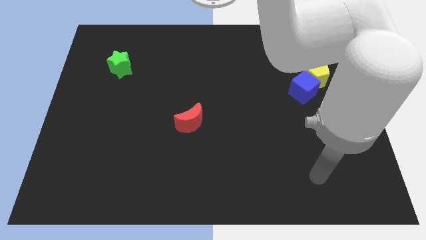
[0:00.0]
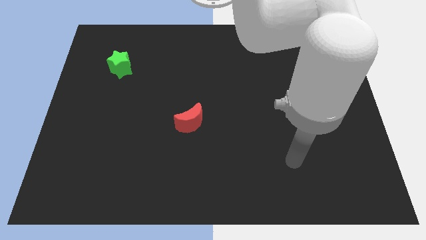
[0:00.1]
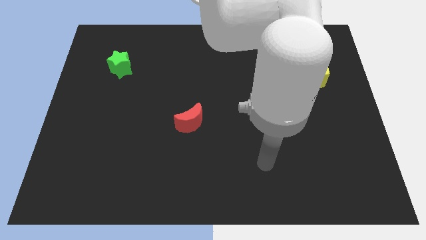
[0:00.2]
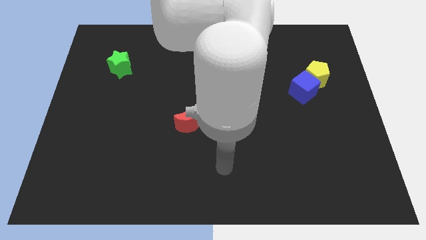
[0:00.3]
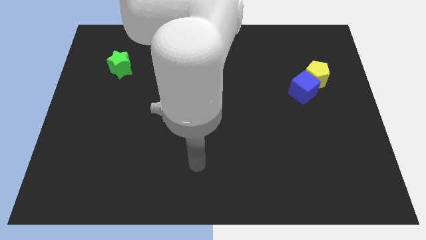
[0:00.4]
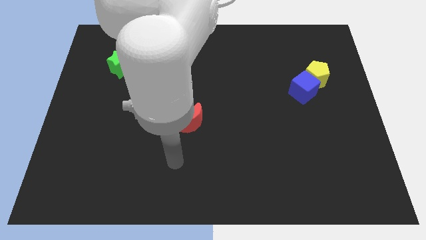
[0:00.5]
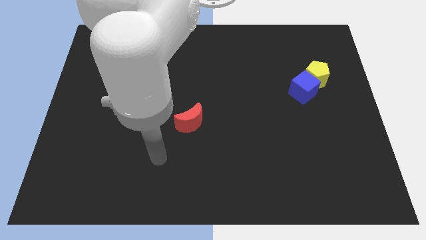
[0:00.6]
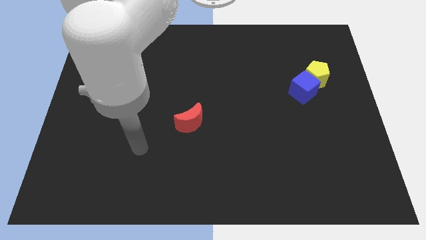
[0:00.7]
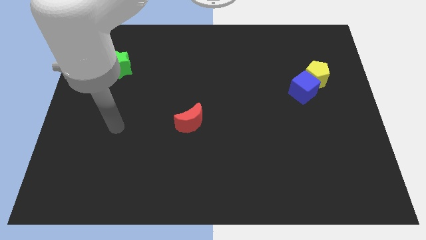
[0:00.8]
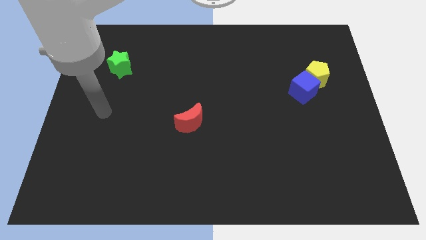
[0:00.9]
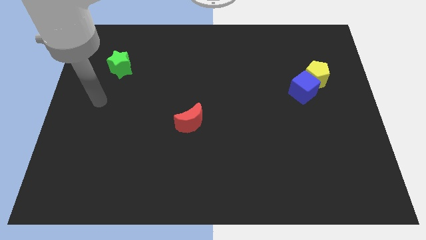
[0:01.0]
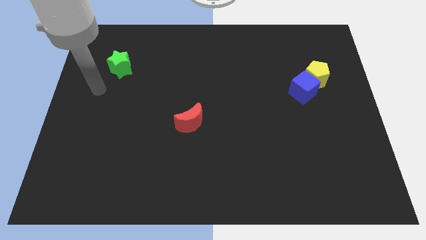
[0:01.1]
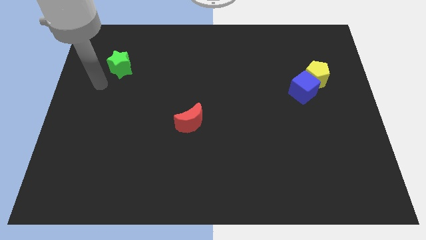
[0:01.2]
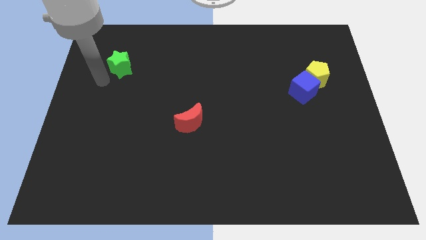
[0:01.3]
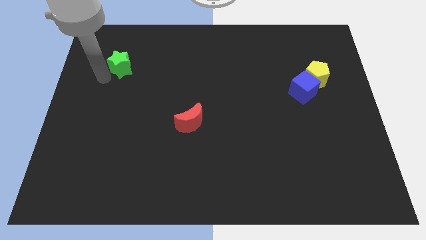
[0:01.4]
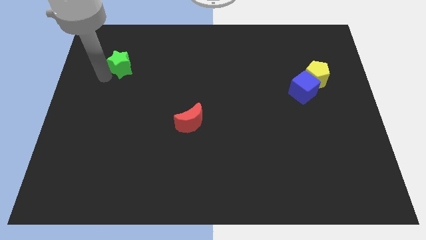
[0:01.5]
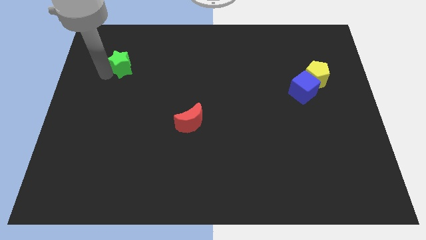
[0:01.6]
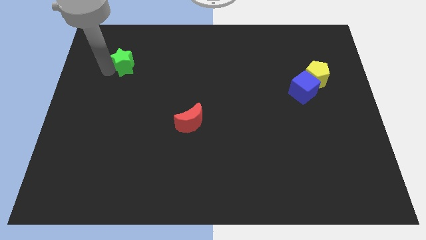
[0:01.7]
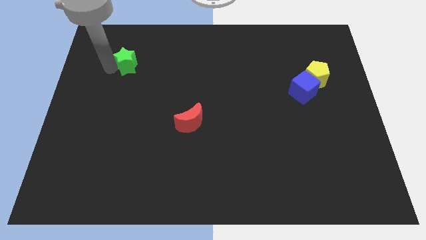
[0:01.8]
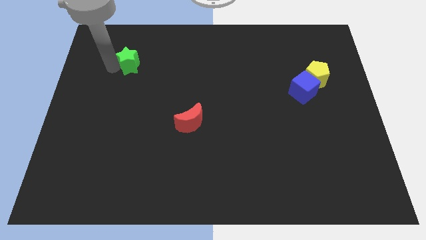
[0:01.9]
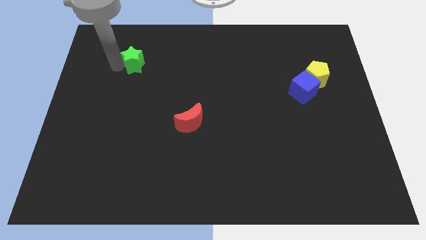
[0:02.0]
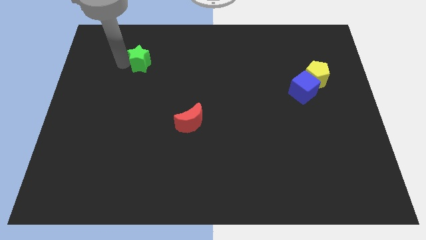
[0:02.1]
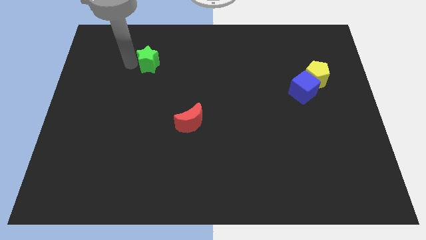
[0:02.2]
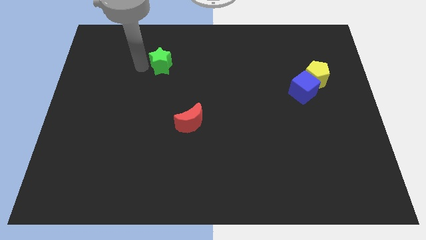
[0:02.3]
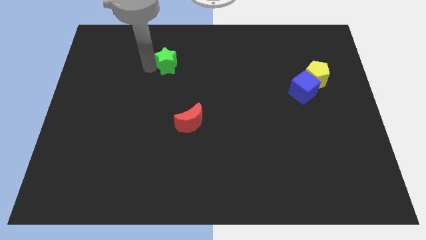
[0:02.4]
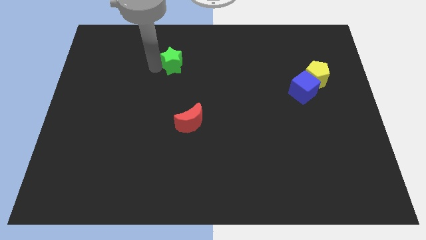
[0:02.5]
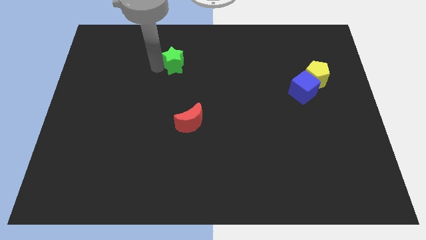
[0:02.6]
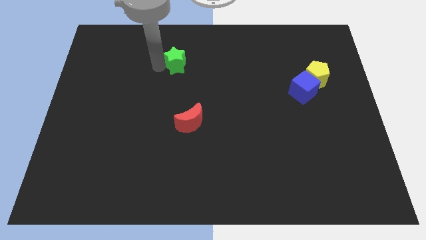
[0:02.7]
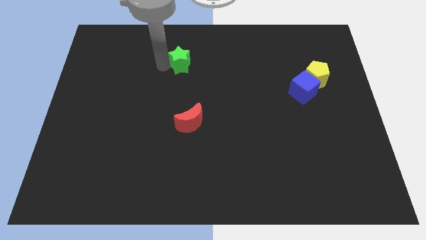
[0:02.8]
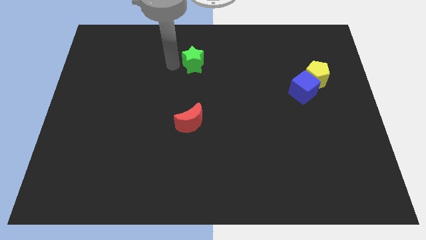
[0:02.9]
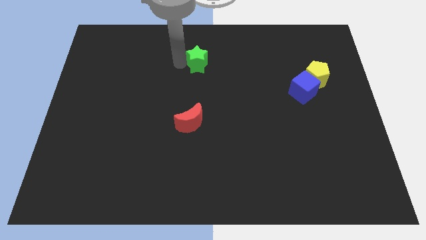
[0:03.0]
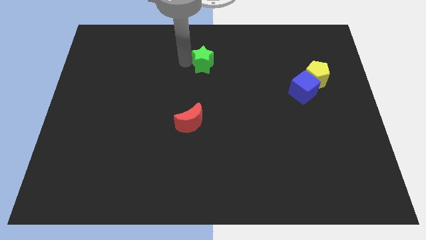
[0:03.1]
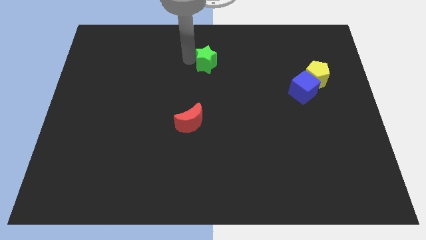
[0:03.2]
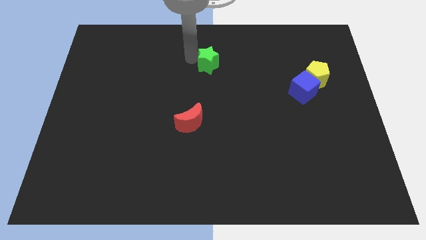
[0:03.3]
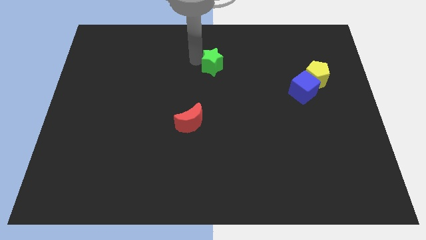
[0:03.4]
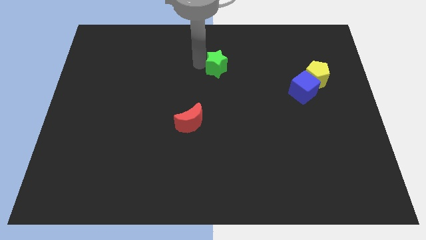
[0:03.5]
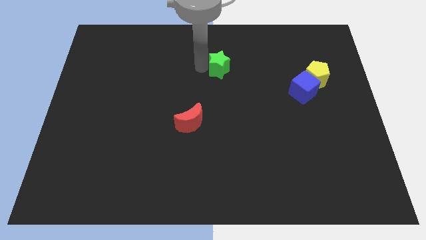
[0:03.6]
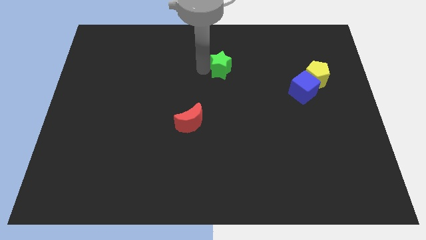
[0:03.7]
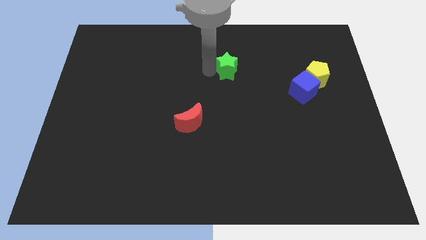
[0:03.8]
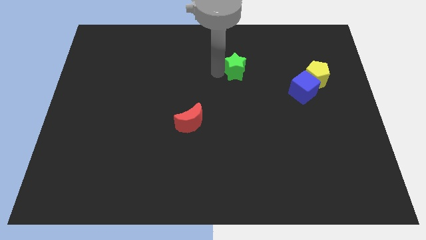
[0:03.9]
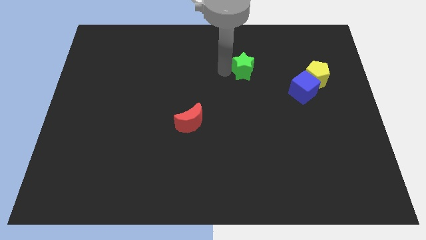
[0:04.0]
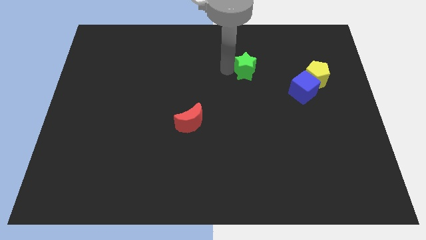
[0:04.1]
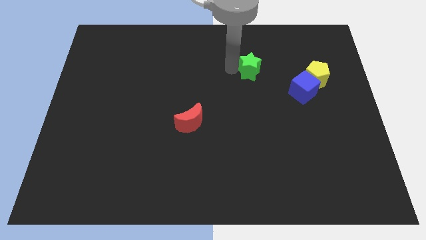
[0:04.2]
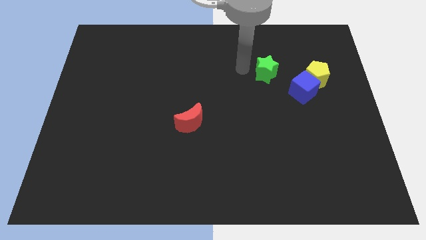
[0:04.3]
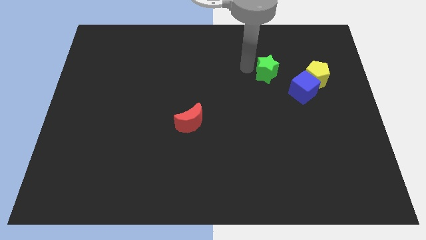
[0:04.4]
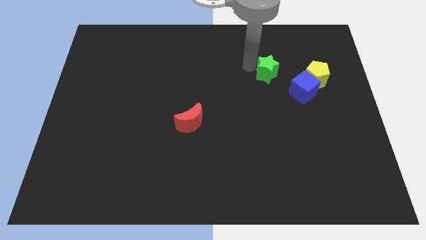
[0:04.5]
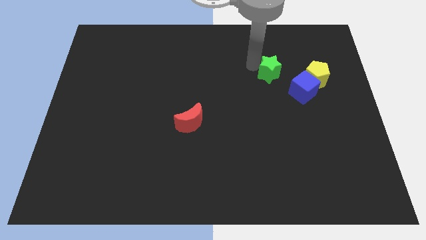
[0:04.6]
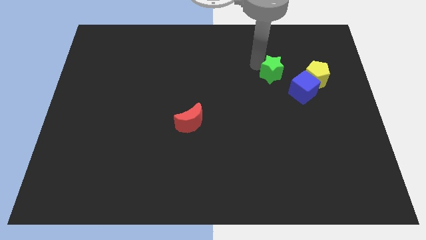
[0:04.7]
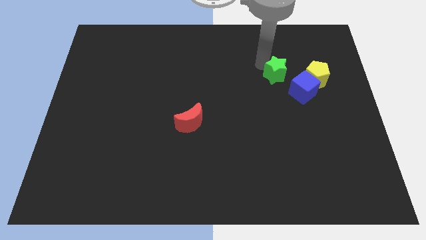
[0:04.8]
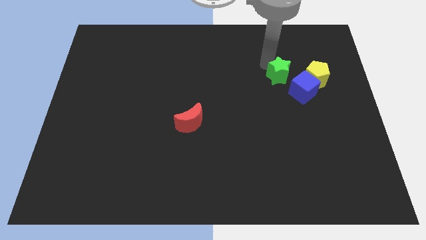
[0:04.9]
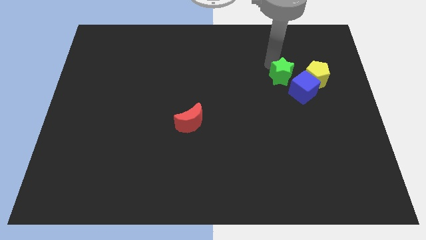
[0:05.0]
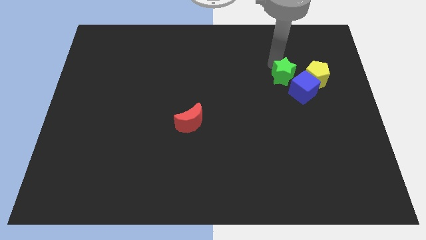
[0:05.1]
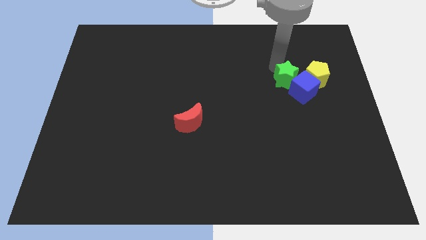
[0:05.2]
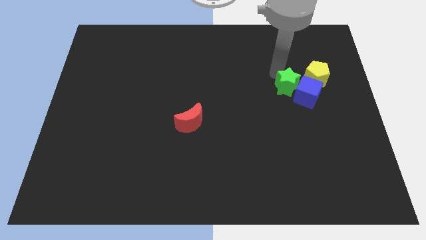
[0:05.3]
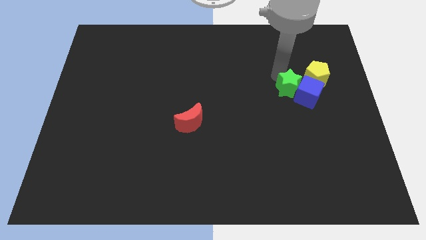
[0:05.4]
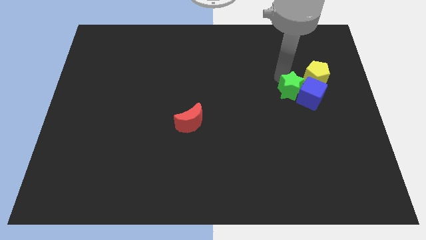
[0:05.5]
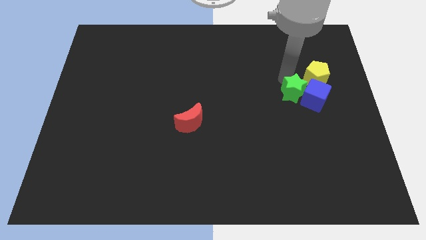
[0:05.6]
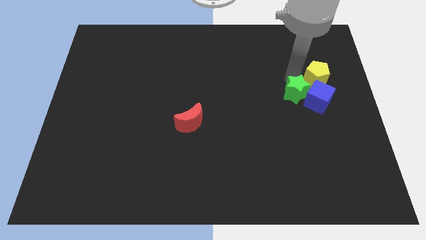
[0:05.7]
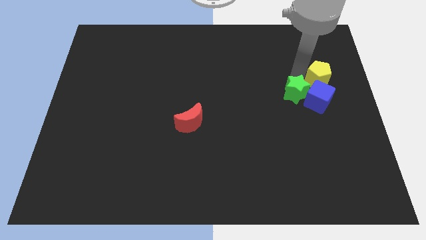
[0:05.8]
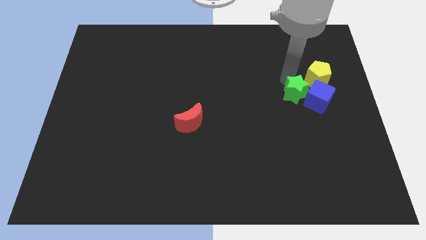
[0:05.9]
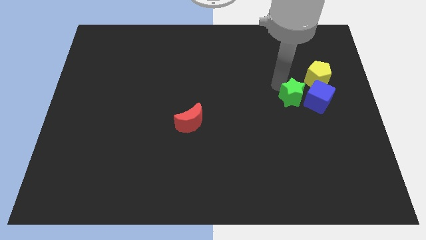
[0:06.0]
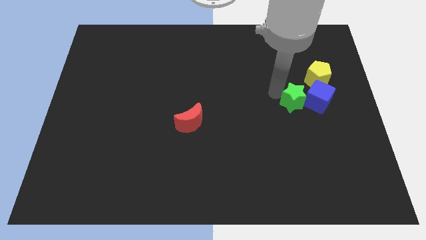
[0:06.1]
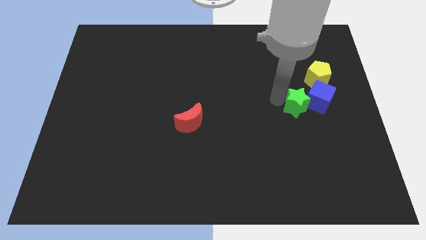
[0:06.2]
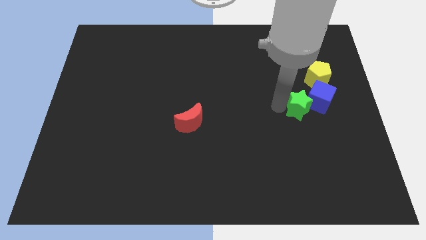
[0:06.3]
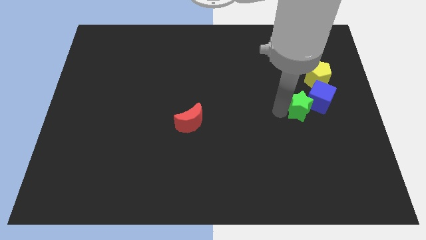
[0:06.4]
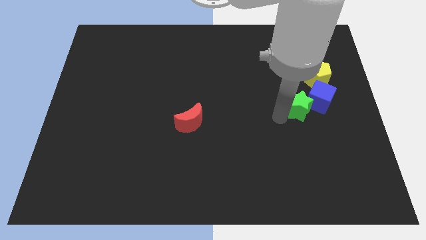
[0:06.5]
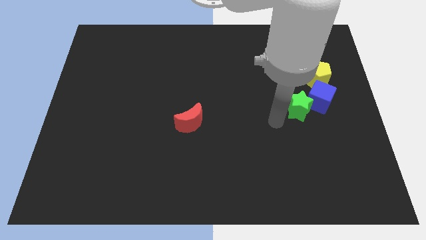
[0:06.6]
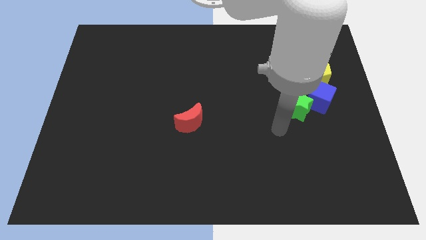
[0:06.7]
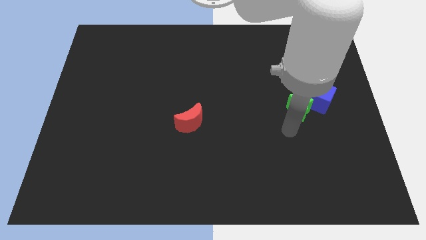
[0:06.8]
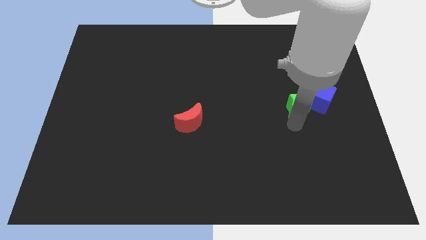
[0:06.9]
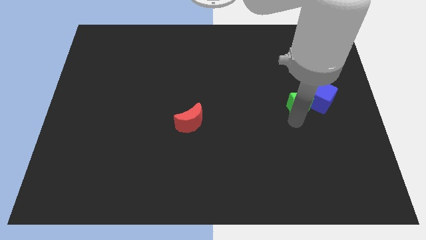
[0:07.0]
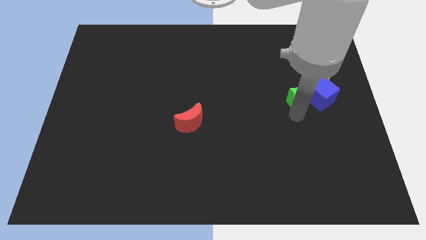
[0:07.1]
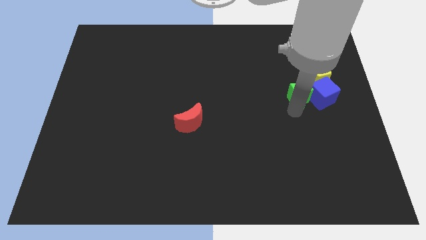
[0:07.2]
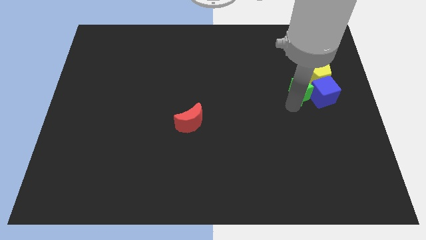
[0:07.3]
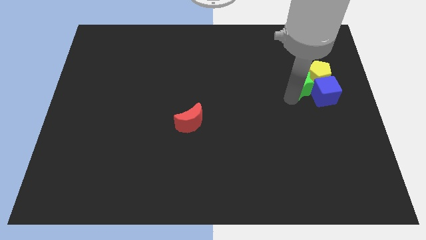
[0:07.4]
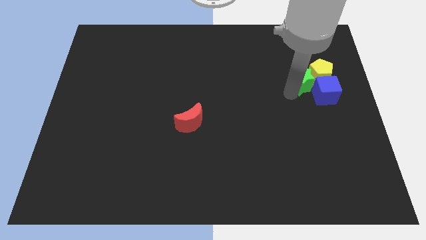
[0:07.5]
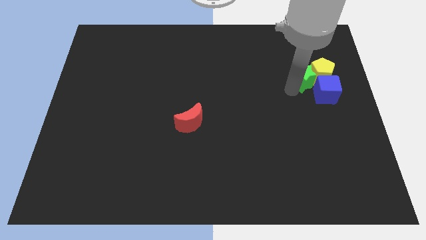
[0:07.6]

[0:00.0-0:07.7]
push the green star next to the pentagon

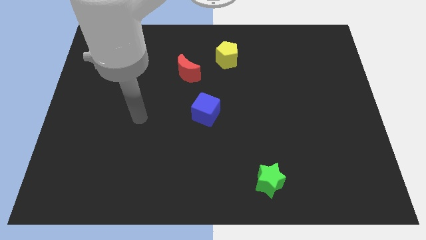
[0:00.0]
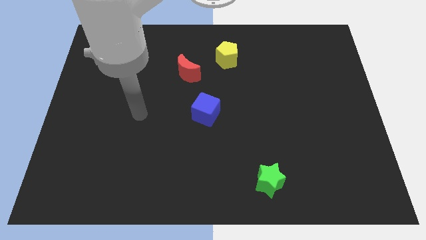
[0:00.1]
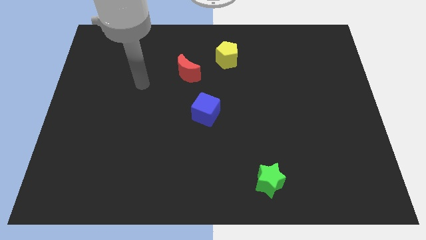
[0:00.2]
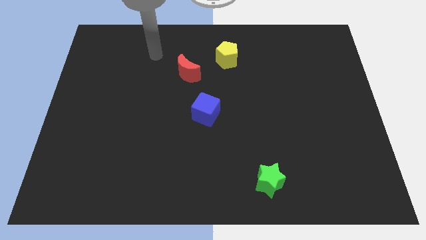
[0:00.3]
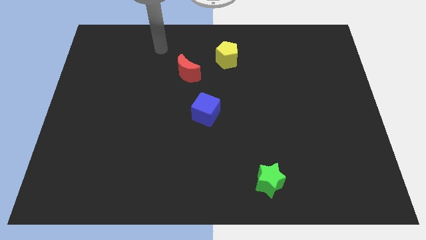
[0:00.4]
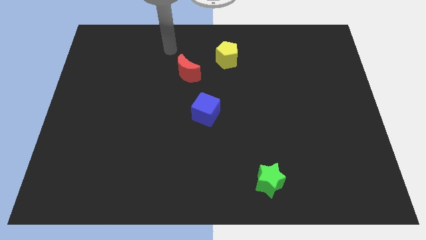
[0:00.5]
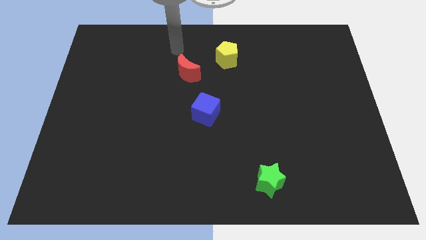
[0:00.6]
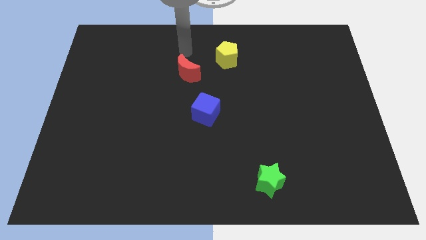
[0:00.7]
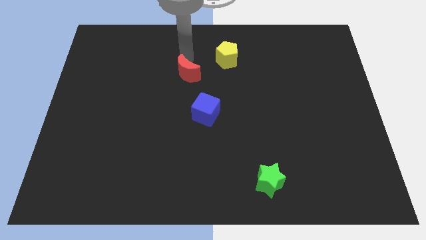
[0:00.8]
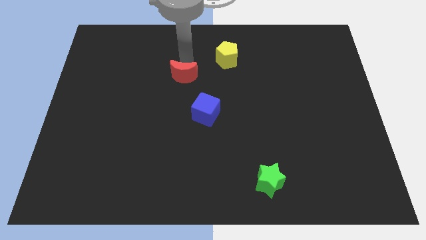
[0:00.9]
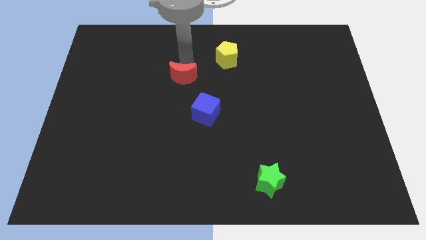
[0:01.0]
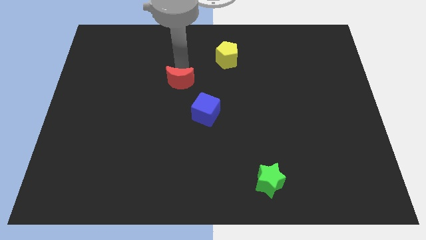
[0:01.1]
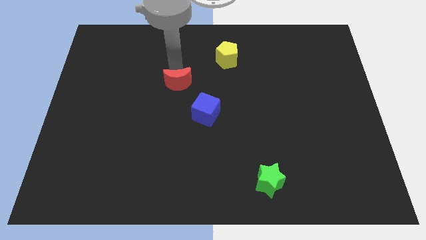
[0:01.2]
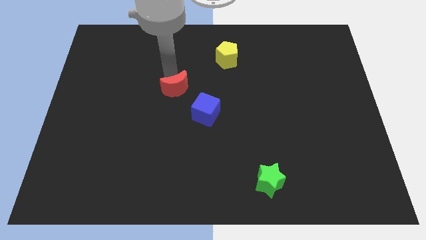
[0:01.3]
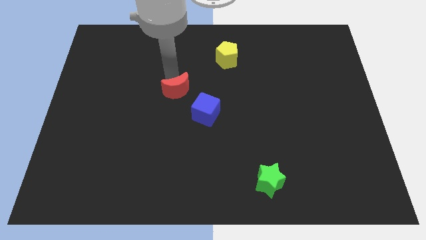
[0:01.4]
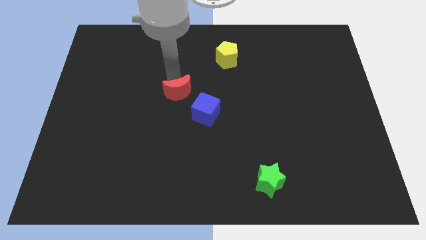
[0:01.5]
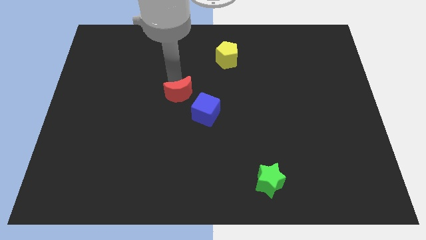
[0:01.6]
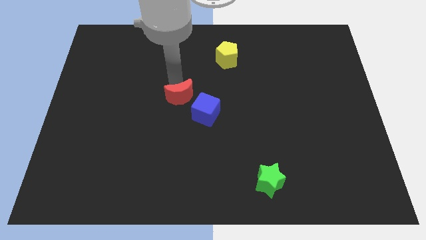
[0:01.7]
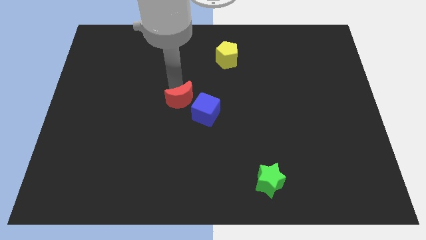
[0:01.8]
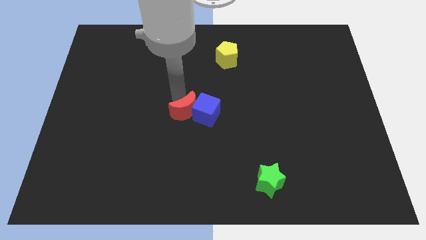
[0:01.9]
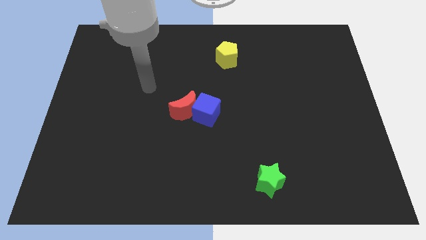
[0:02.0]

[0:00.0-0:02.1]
move the red block towards the cube
